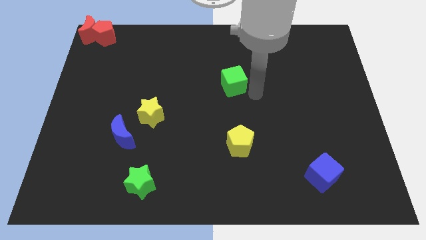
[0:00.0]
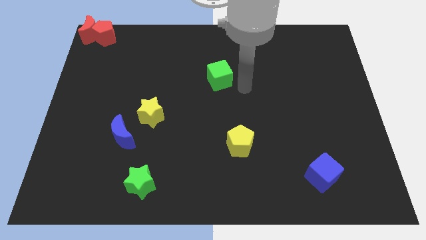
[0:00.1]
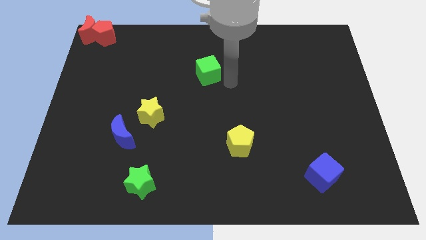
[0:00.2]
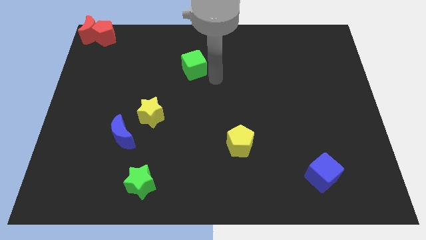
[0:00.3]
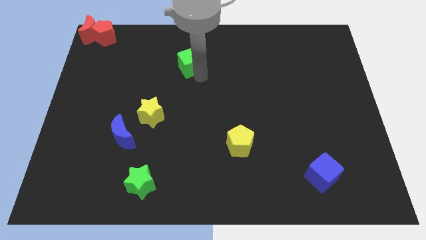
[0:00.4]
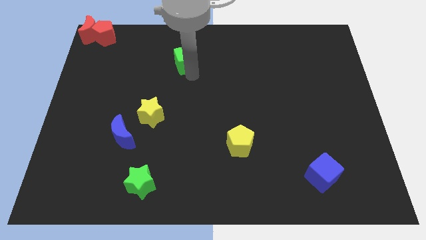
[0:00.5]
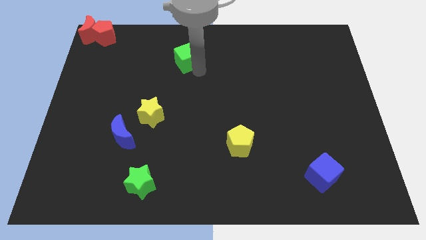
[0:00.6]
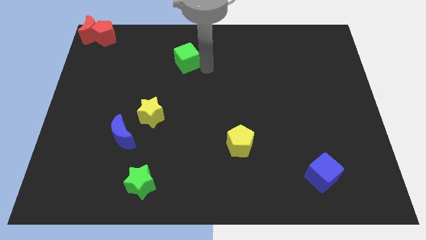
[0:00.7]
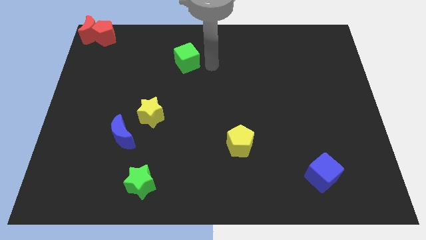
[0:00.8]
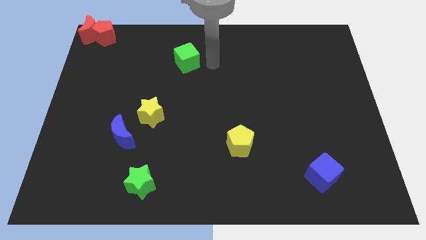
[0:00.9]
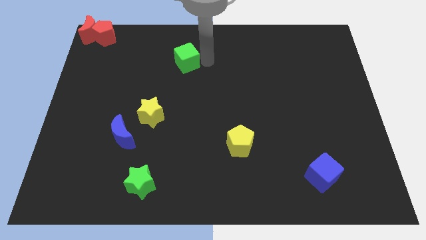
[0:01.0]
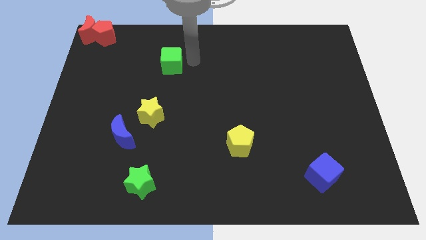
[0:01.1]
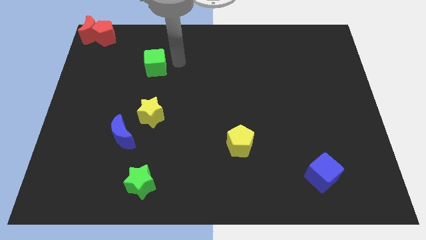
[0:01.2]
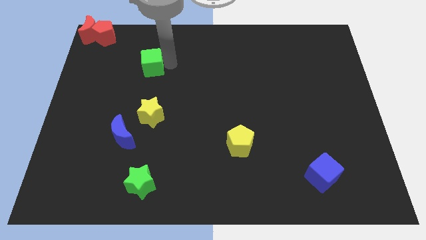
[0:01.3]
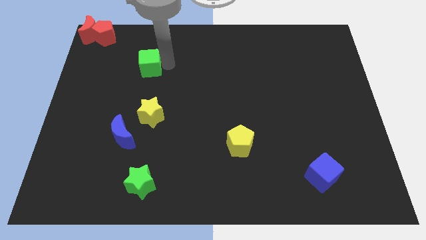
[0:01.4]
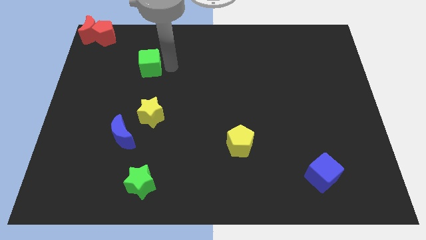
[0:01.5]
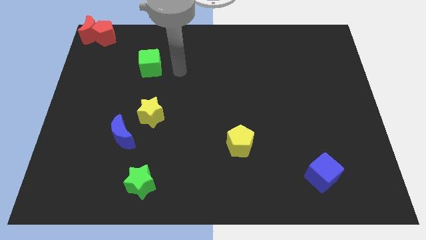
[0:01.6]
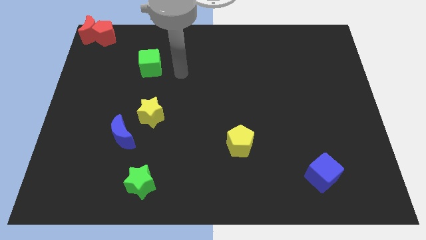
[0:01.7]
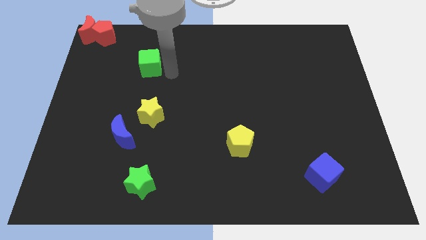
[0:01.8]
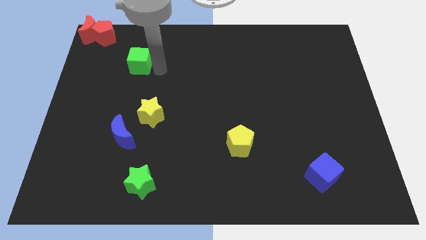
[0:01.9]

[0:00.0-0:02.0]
move the green cube above the yellow star

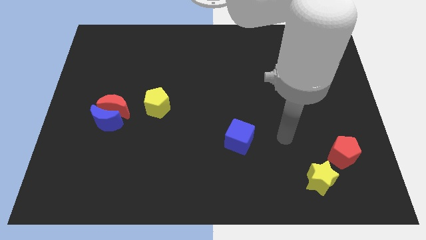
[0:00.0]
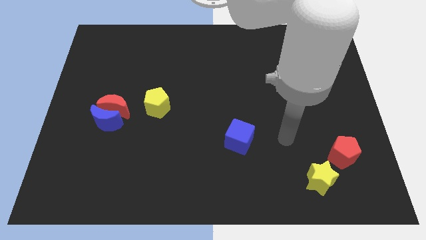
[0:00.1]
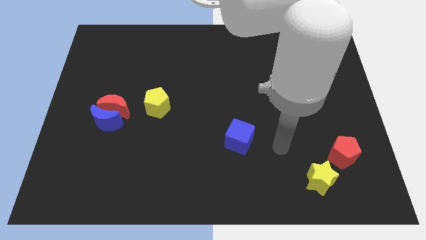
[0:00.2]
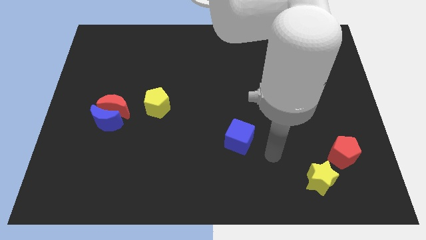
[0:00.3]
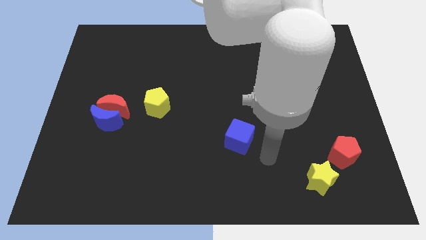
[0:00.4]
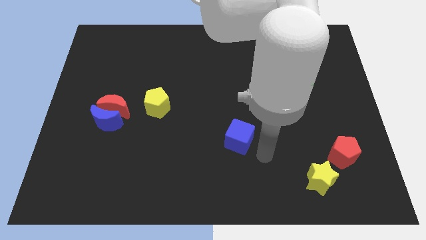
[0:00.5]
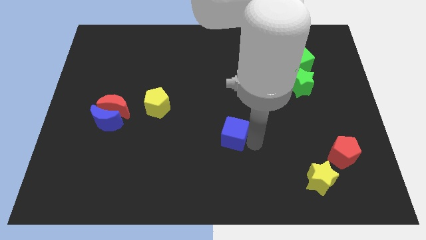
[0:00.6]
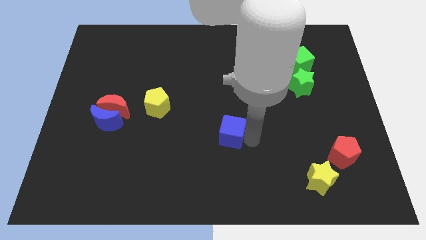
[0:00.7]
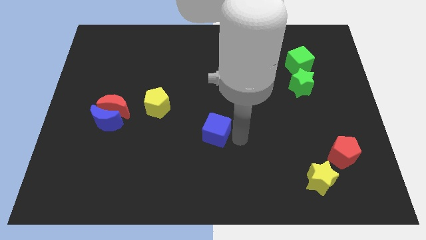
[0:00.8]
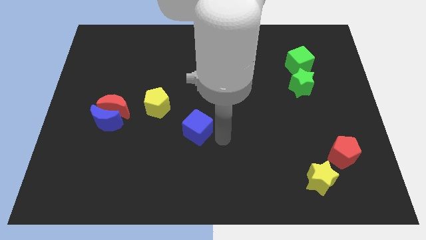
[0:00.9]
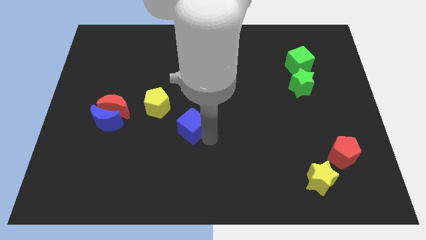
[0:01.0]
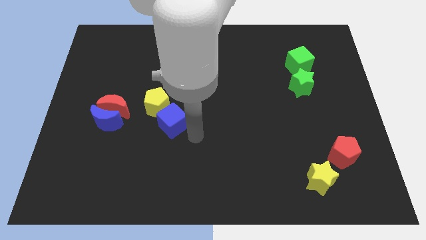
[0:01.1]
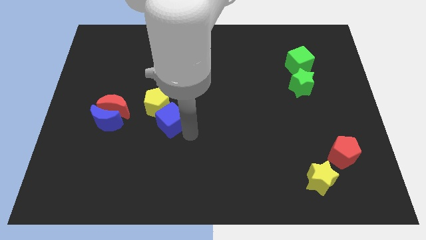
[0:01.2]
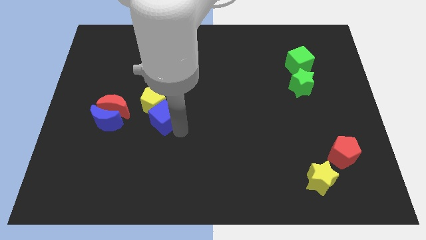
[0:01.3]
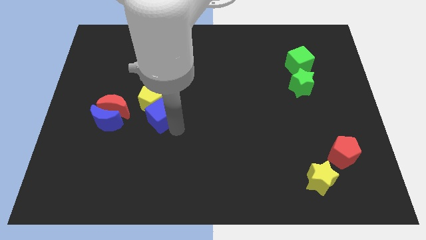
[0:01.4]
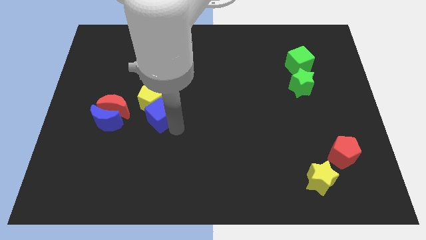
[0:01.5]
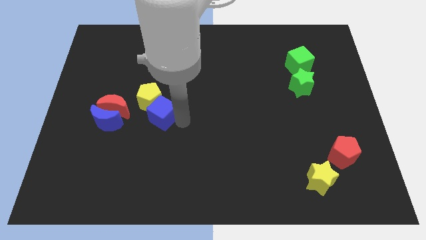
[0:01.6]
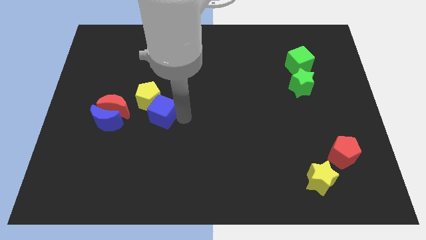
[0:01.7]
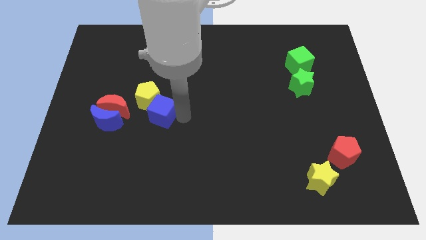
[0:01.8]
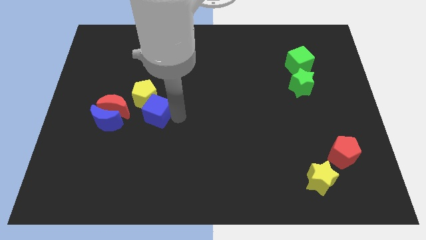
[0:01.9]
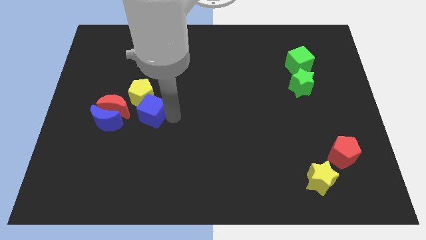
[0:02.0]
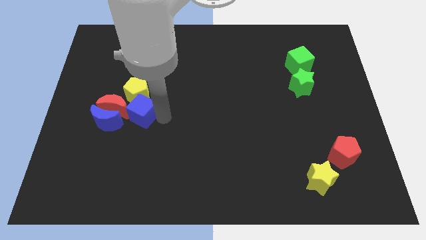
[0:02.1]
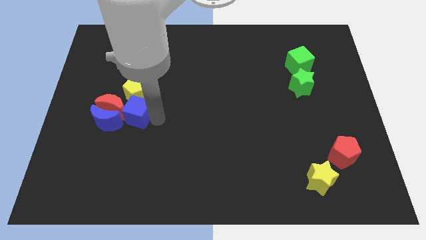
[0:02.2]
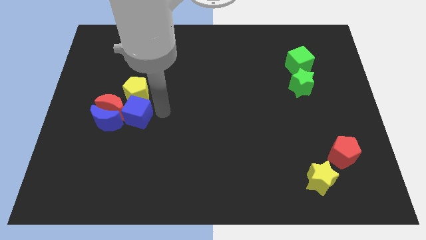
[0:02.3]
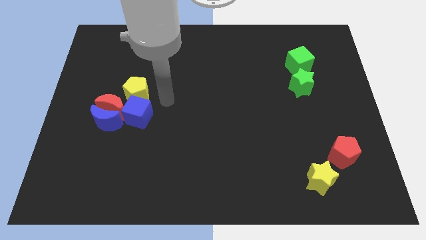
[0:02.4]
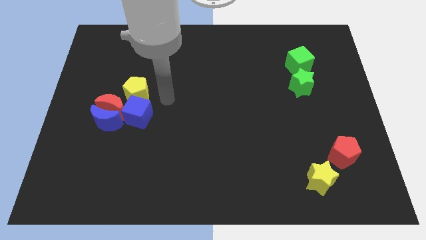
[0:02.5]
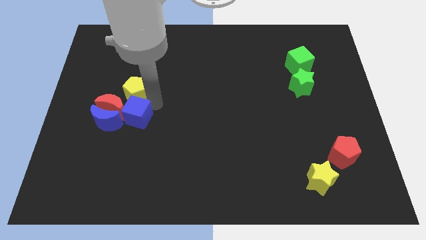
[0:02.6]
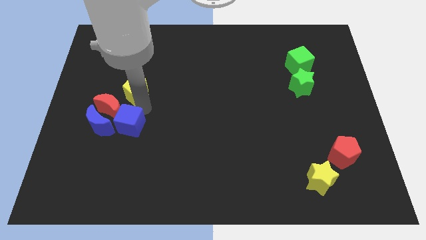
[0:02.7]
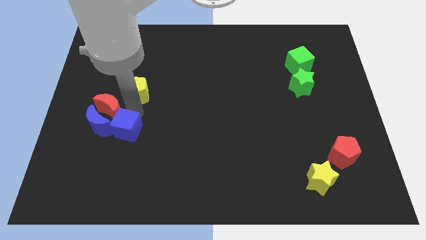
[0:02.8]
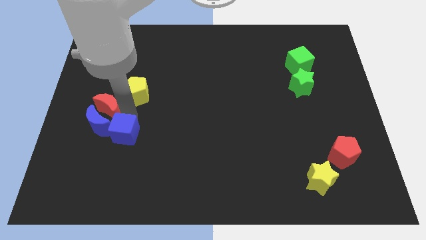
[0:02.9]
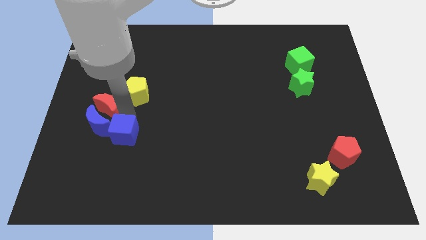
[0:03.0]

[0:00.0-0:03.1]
push blue cube below yellow pentagon

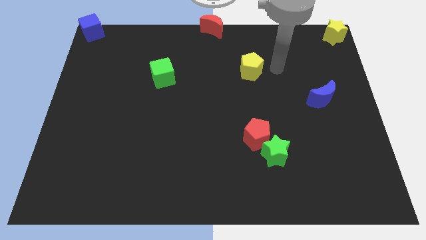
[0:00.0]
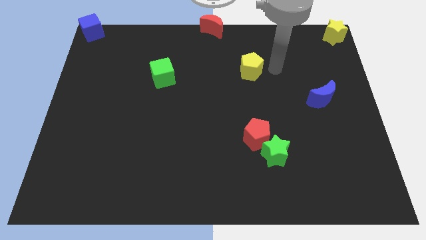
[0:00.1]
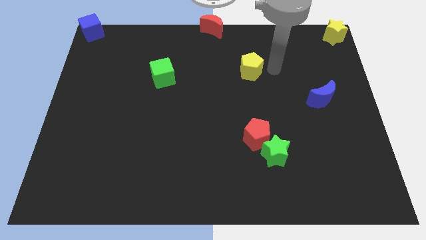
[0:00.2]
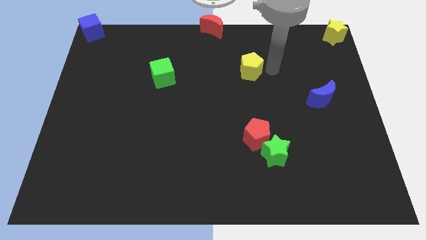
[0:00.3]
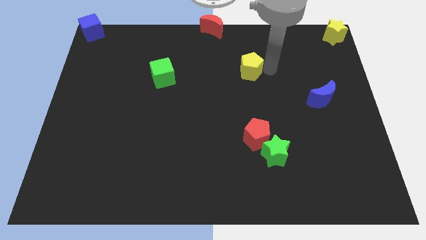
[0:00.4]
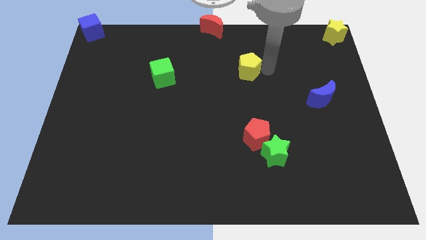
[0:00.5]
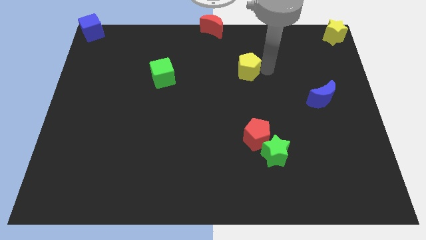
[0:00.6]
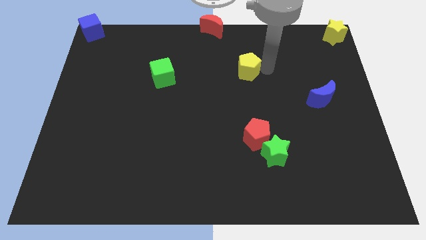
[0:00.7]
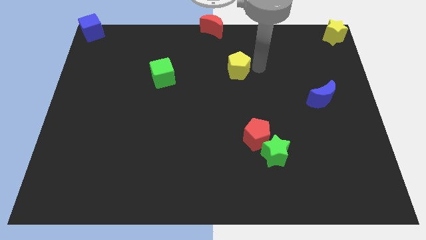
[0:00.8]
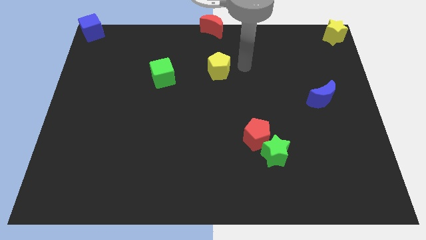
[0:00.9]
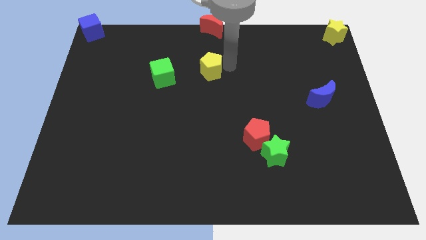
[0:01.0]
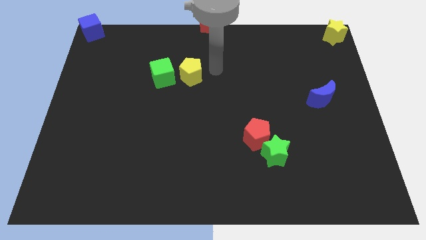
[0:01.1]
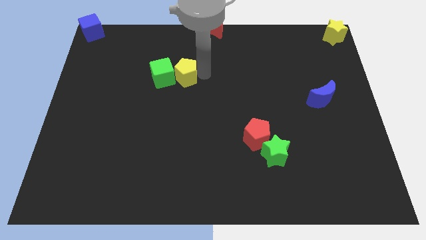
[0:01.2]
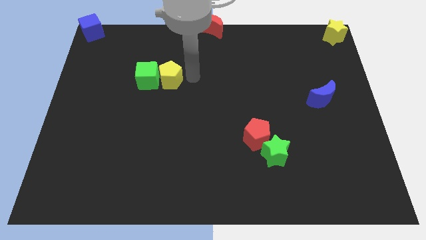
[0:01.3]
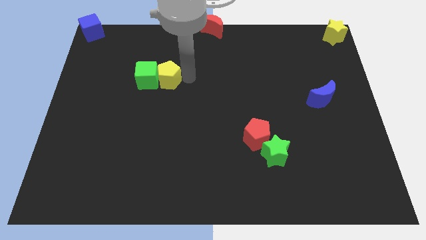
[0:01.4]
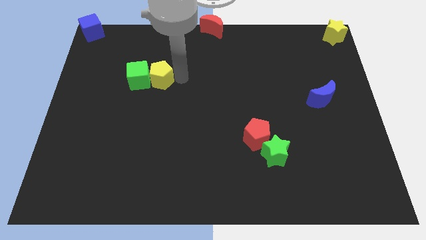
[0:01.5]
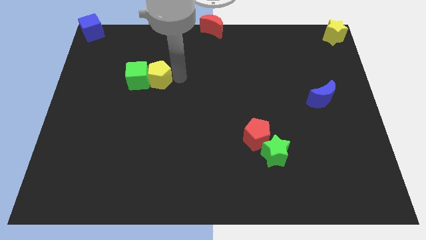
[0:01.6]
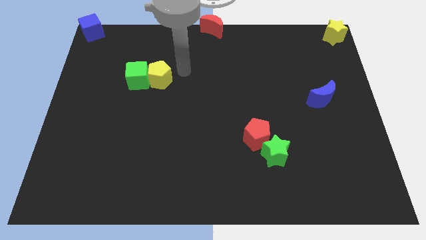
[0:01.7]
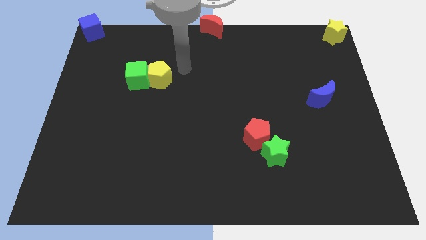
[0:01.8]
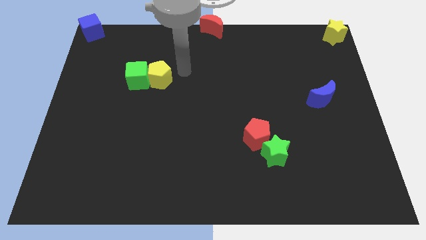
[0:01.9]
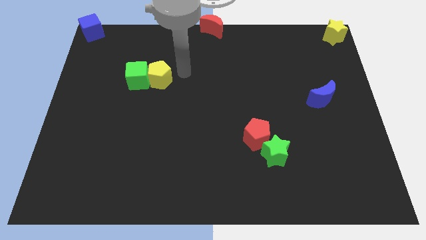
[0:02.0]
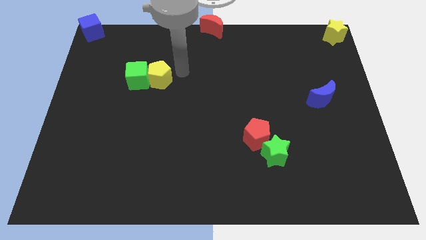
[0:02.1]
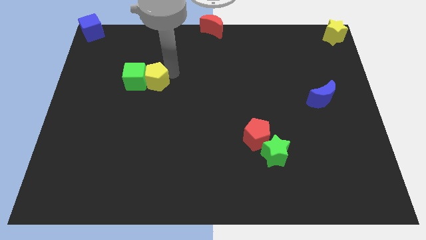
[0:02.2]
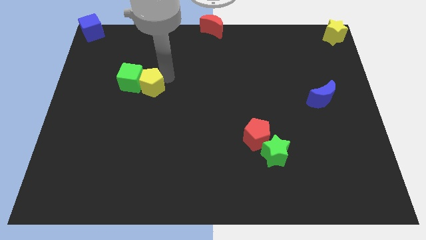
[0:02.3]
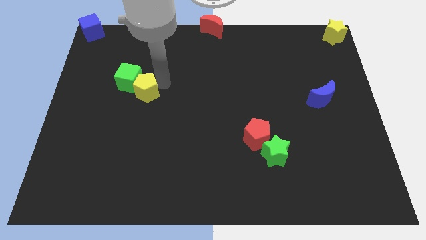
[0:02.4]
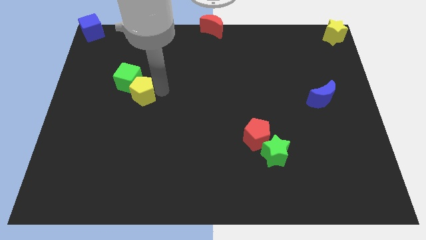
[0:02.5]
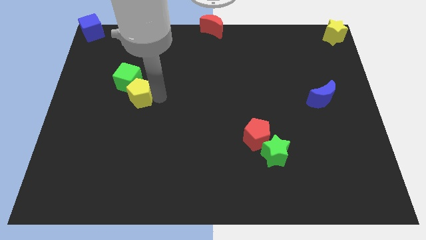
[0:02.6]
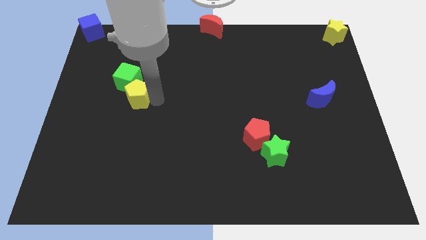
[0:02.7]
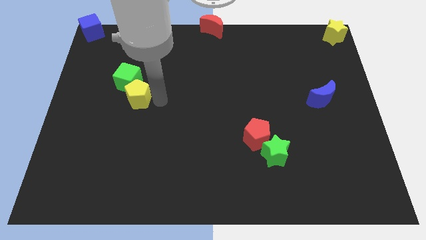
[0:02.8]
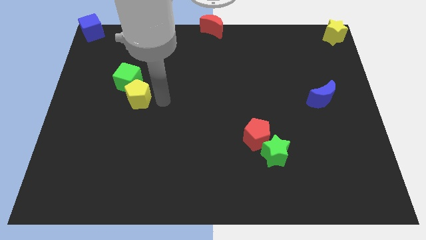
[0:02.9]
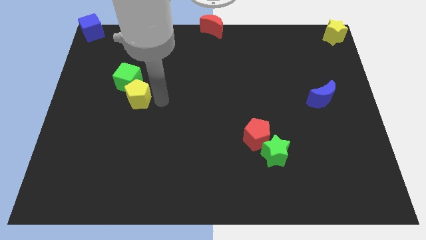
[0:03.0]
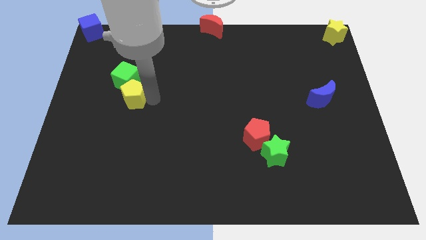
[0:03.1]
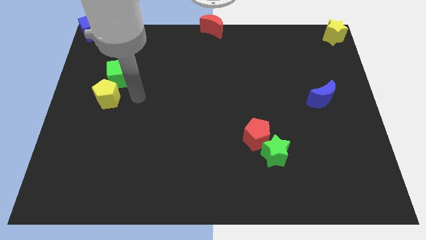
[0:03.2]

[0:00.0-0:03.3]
push the yellow pentagon into the green cube

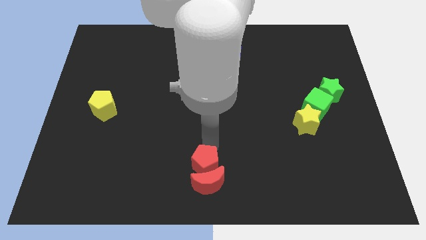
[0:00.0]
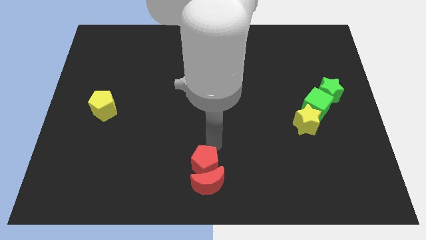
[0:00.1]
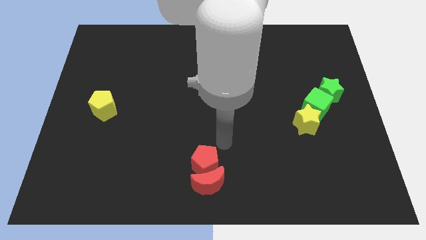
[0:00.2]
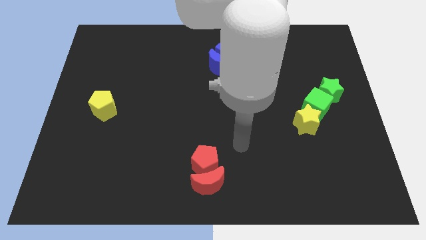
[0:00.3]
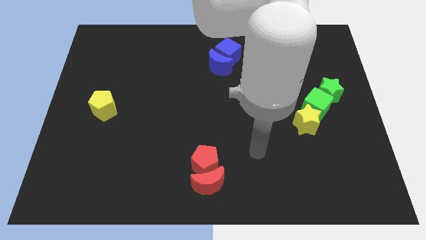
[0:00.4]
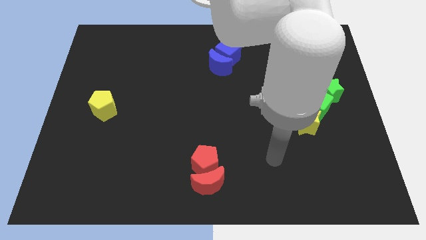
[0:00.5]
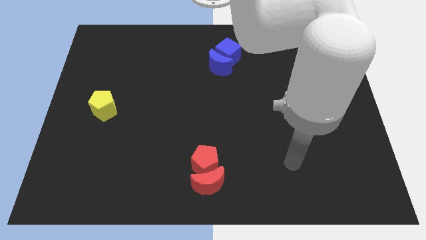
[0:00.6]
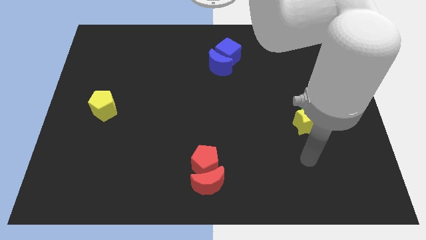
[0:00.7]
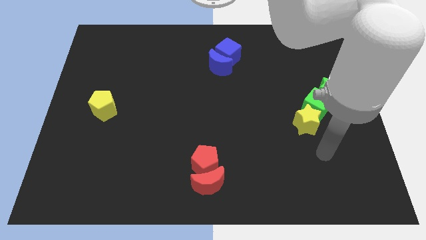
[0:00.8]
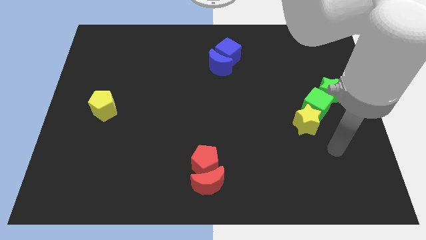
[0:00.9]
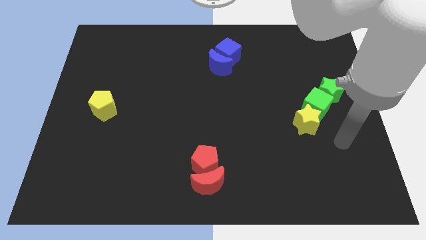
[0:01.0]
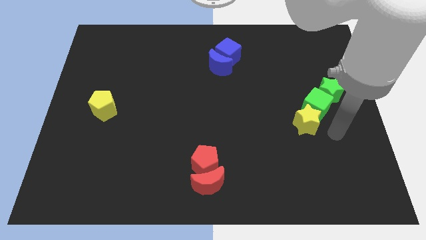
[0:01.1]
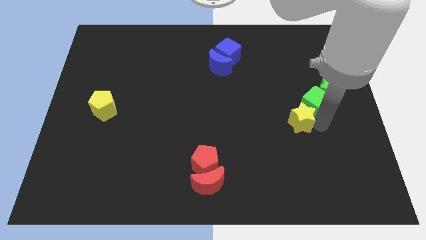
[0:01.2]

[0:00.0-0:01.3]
point your arm right of yellow star
